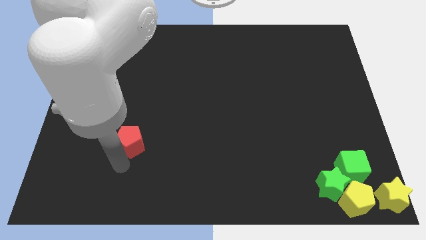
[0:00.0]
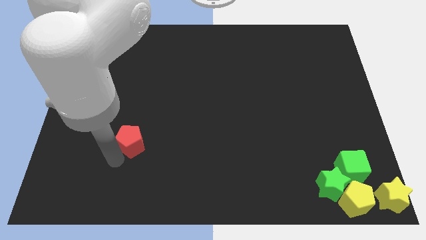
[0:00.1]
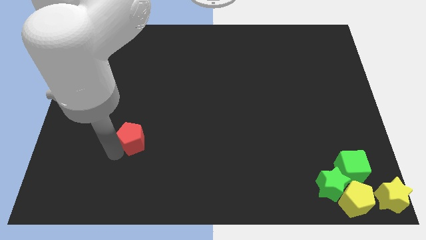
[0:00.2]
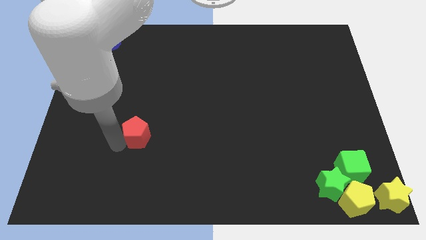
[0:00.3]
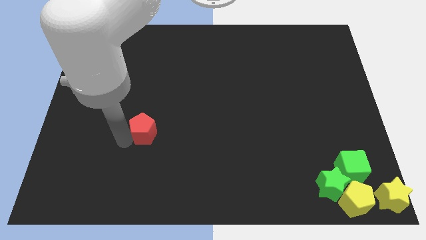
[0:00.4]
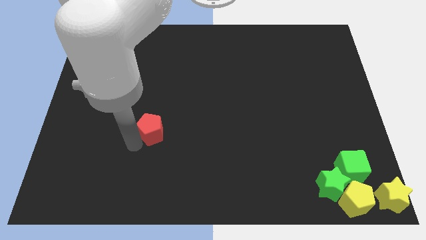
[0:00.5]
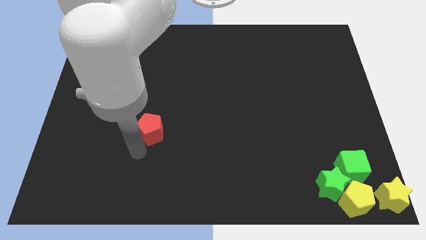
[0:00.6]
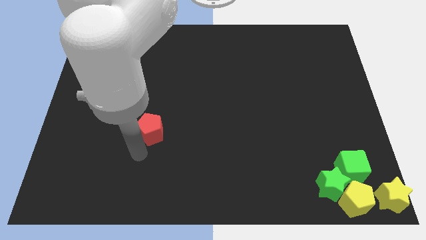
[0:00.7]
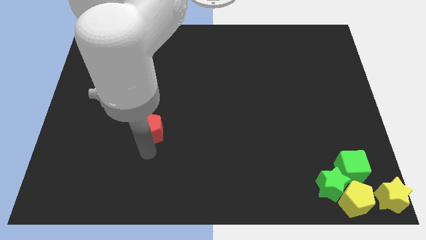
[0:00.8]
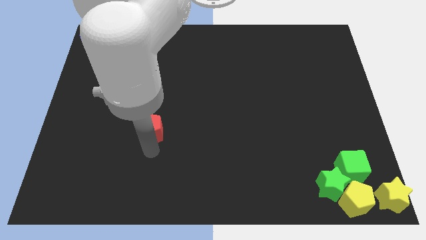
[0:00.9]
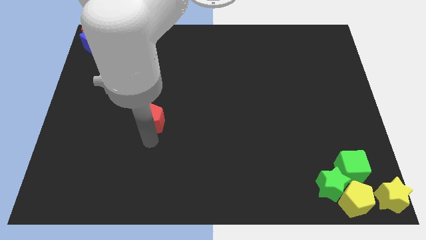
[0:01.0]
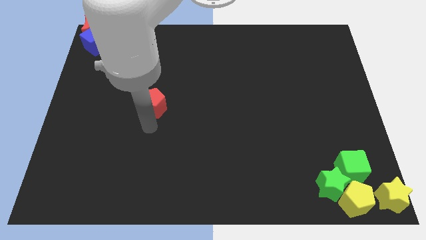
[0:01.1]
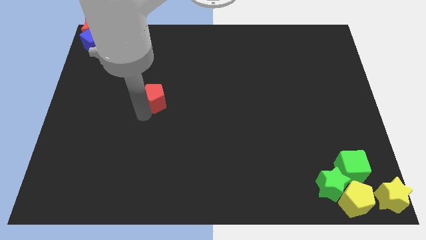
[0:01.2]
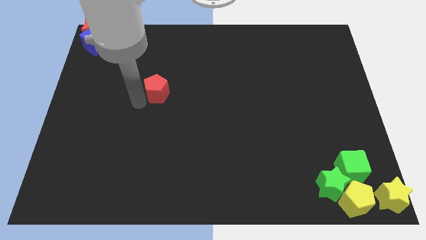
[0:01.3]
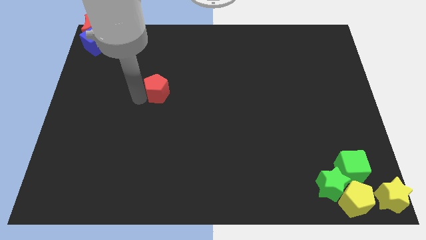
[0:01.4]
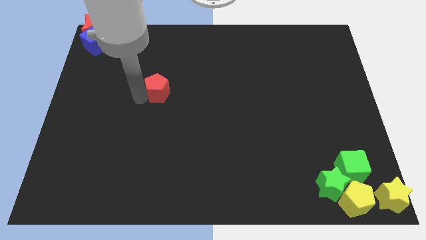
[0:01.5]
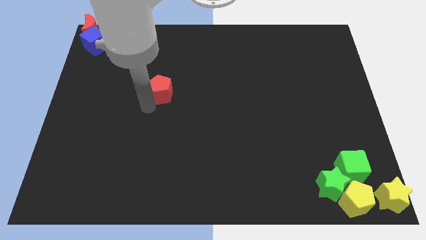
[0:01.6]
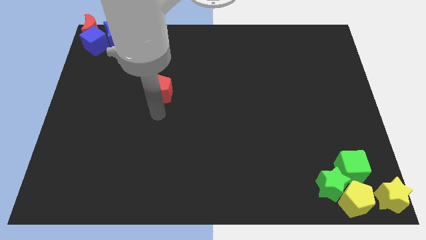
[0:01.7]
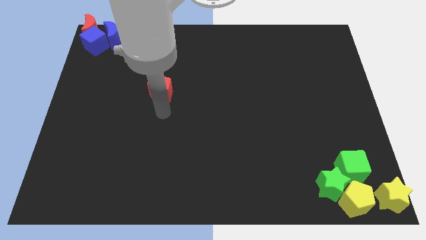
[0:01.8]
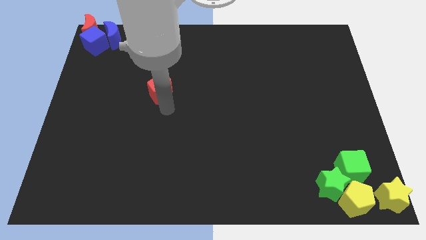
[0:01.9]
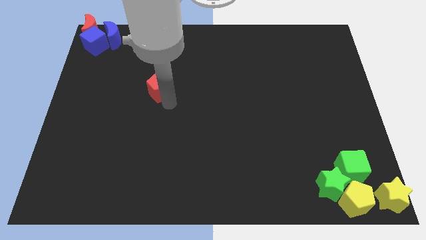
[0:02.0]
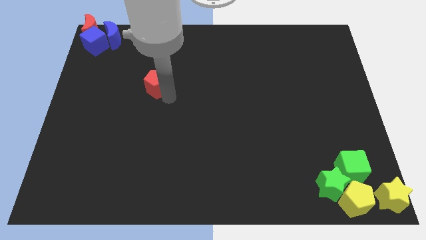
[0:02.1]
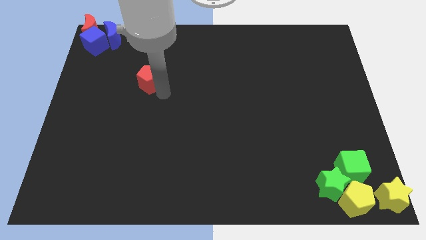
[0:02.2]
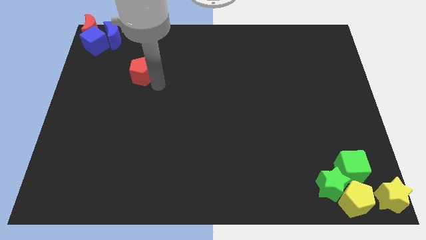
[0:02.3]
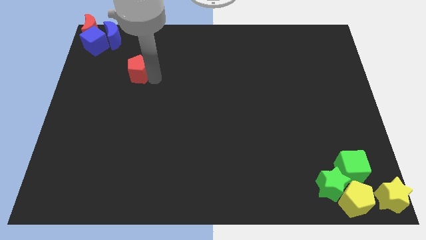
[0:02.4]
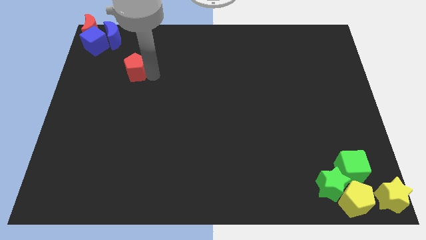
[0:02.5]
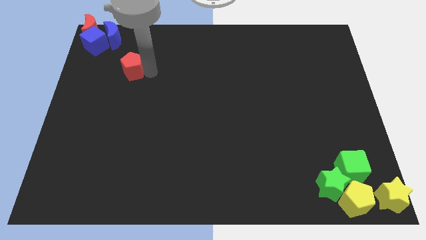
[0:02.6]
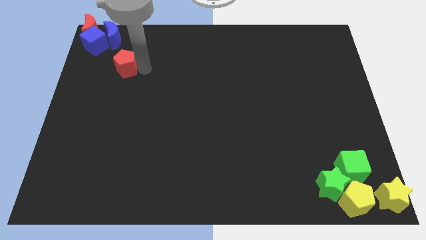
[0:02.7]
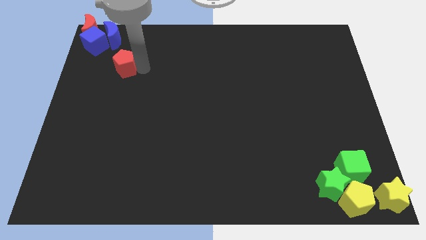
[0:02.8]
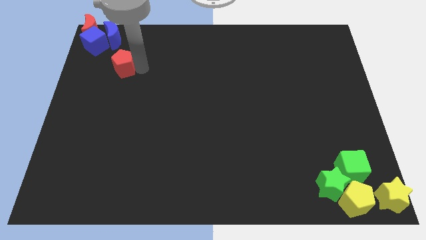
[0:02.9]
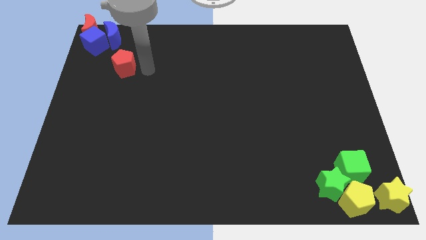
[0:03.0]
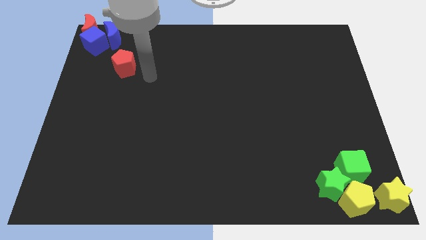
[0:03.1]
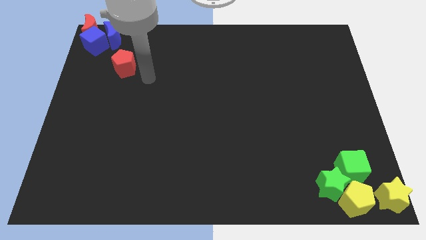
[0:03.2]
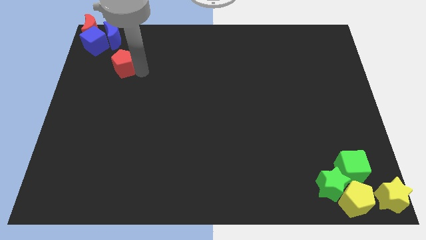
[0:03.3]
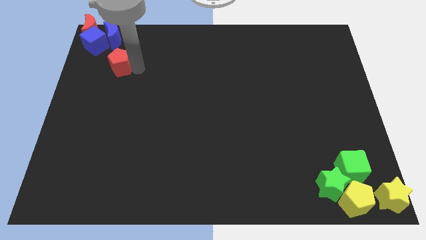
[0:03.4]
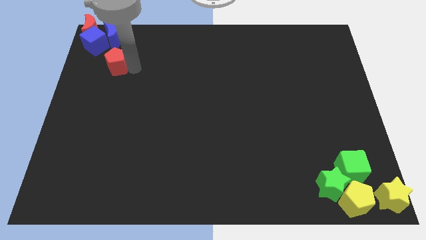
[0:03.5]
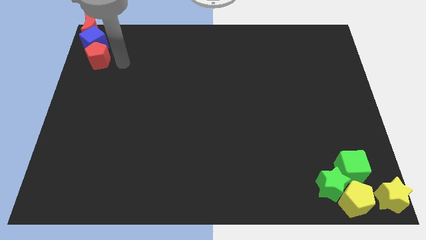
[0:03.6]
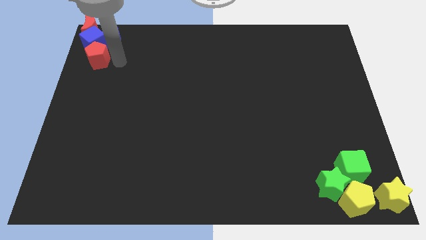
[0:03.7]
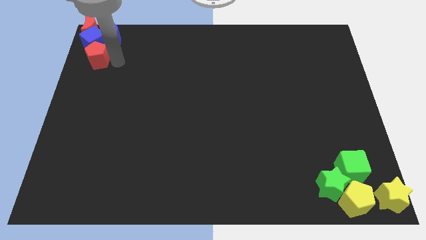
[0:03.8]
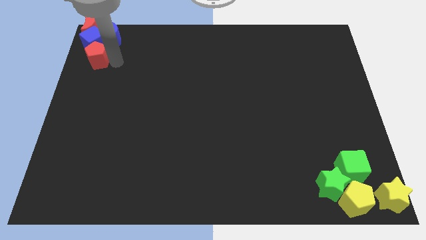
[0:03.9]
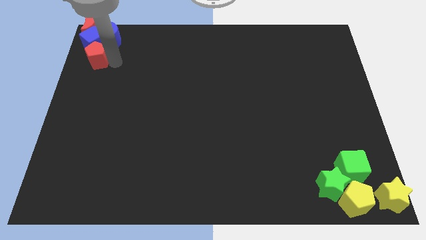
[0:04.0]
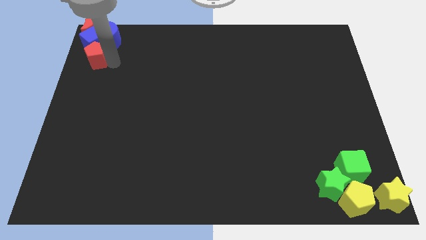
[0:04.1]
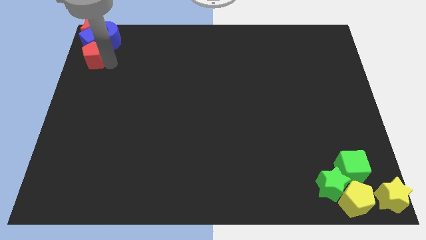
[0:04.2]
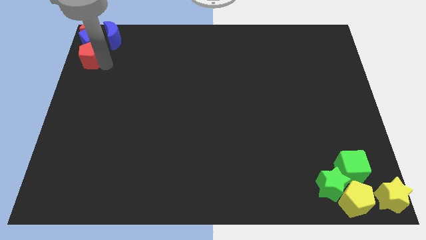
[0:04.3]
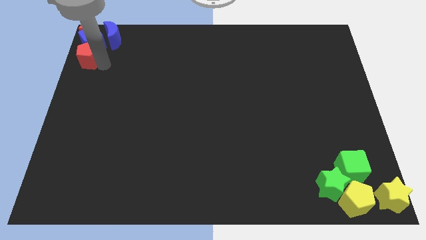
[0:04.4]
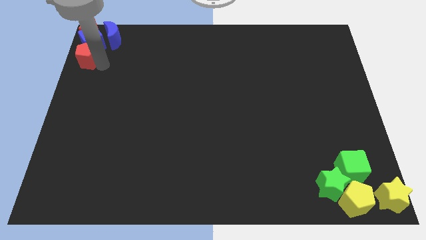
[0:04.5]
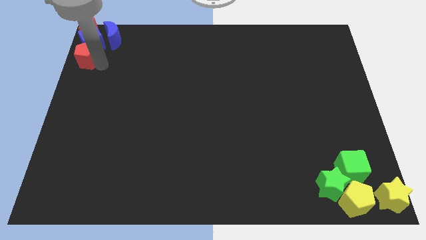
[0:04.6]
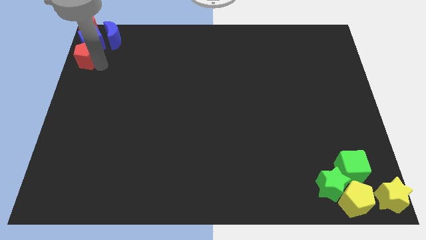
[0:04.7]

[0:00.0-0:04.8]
push the red pentagon into the blue cube

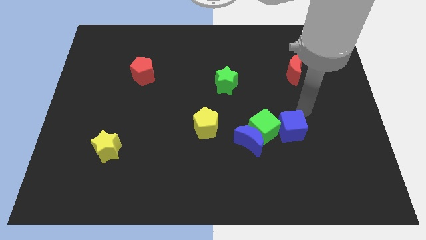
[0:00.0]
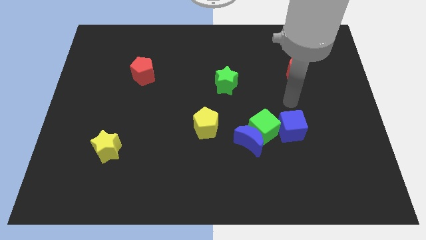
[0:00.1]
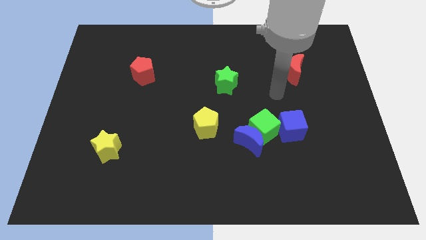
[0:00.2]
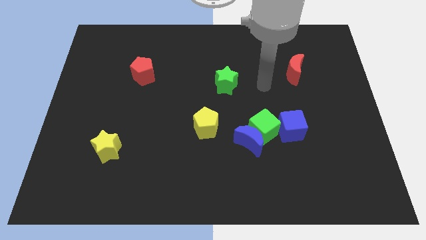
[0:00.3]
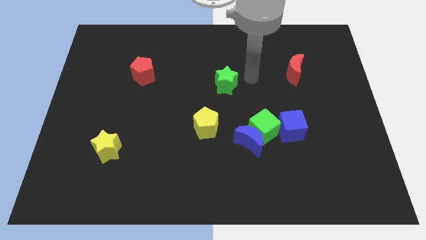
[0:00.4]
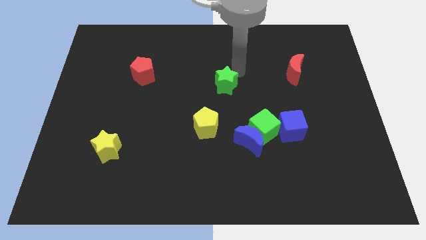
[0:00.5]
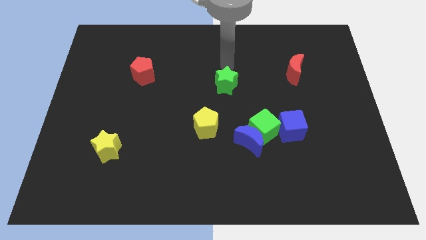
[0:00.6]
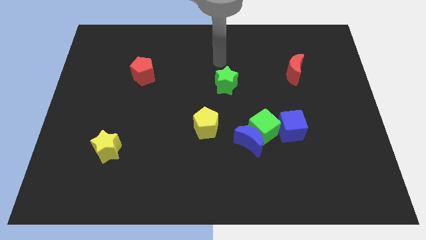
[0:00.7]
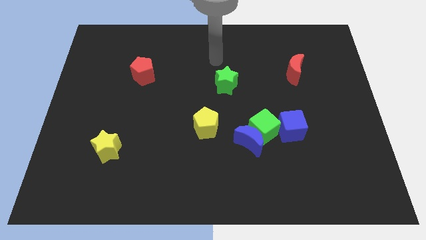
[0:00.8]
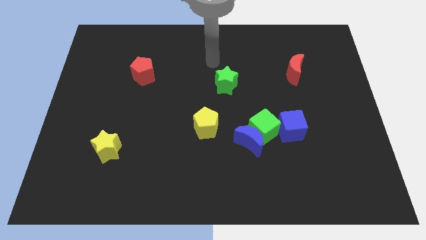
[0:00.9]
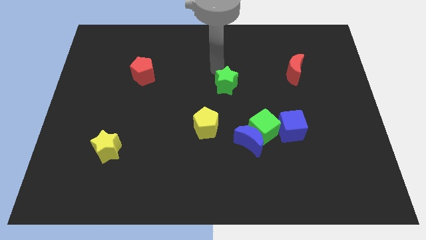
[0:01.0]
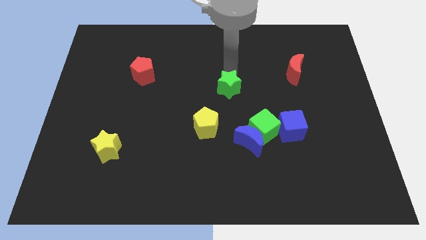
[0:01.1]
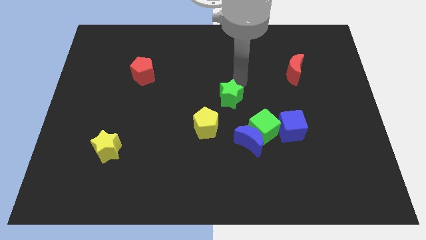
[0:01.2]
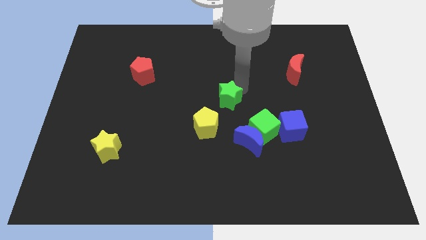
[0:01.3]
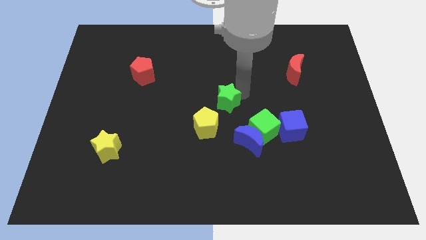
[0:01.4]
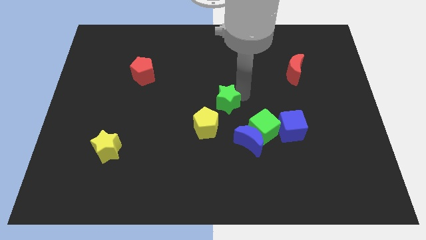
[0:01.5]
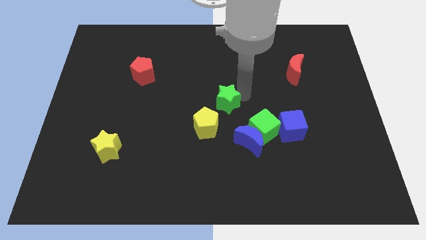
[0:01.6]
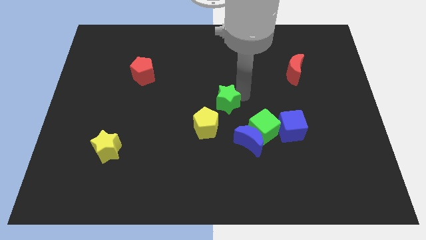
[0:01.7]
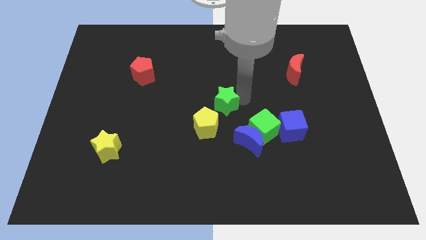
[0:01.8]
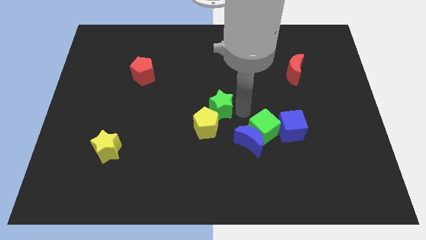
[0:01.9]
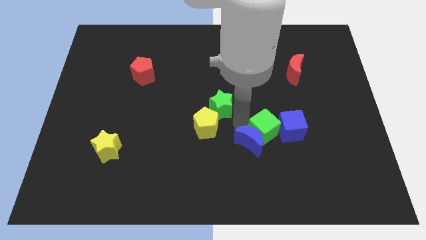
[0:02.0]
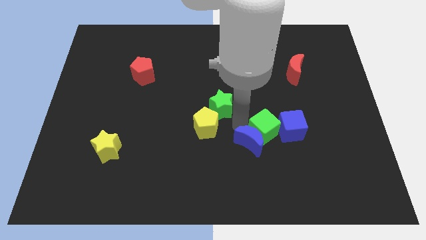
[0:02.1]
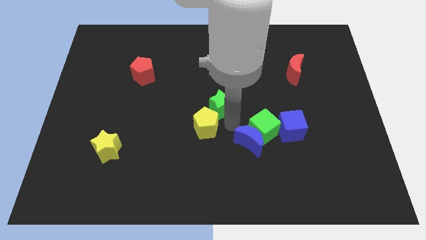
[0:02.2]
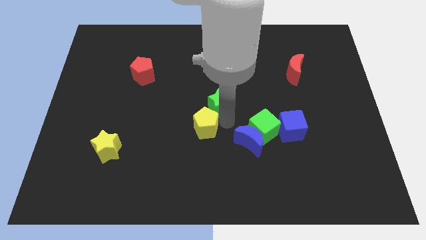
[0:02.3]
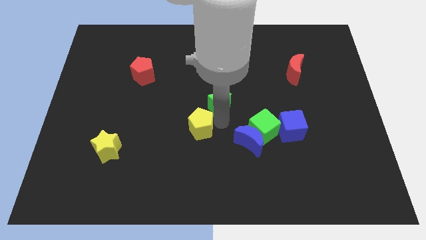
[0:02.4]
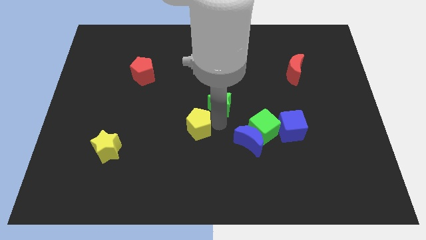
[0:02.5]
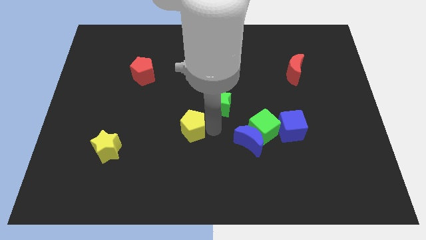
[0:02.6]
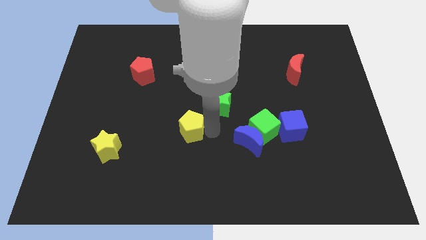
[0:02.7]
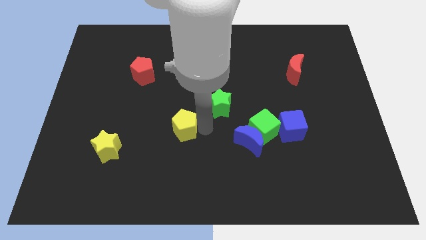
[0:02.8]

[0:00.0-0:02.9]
push the green star towards the yellow pentagon

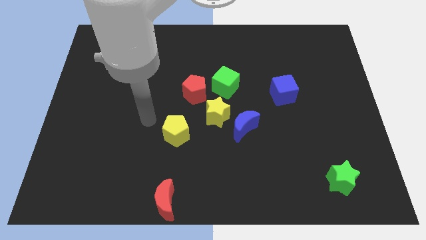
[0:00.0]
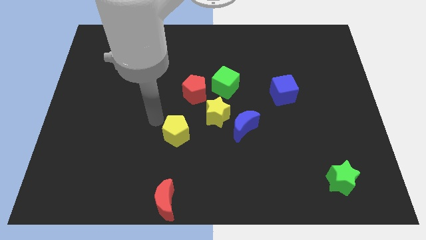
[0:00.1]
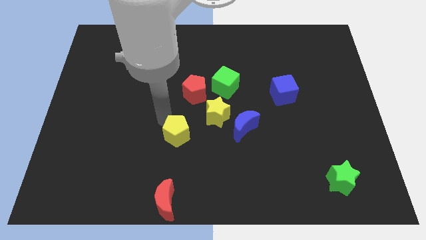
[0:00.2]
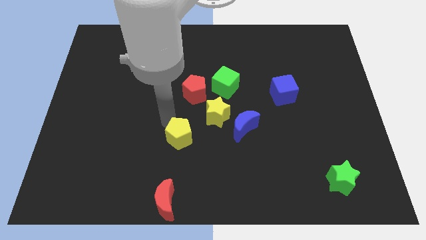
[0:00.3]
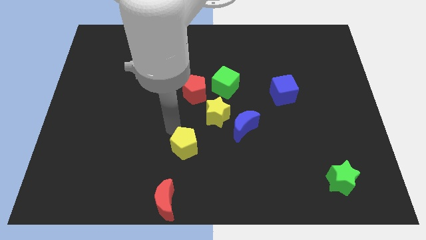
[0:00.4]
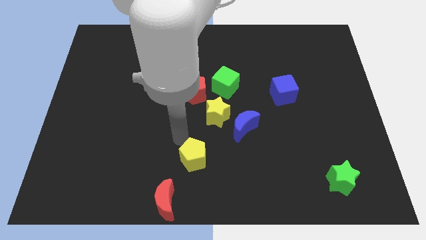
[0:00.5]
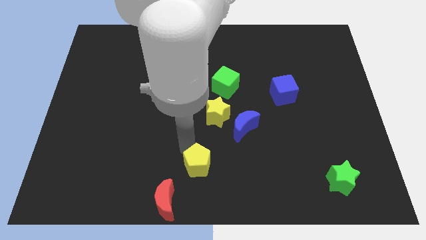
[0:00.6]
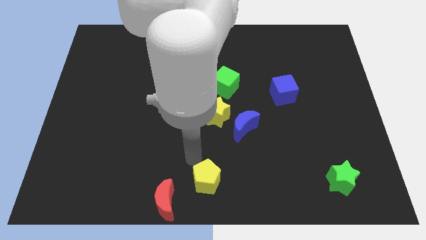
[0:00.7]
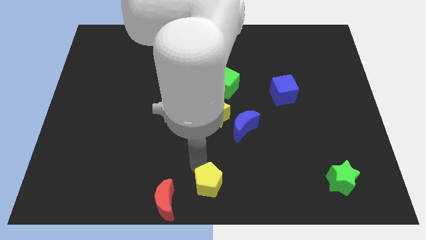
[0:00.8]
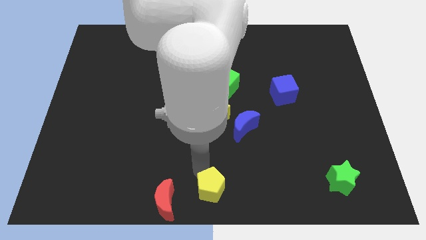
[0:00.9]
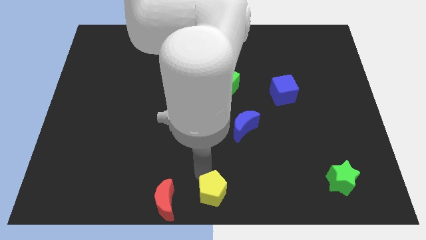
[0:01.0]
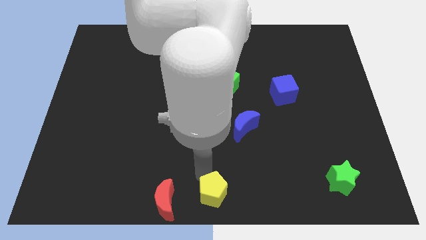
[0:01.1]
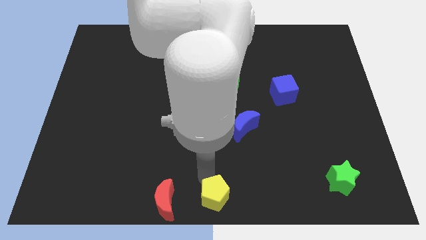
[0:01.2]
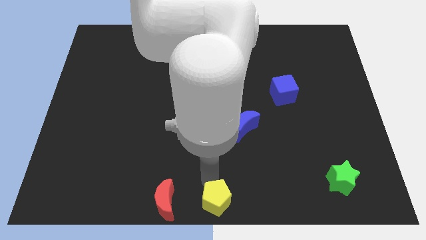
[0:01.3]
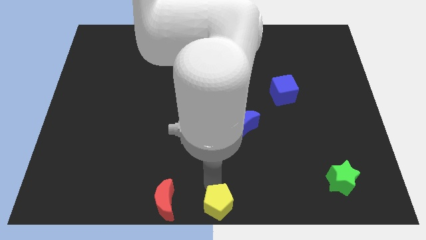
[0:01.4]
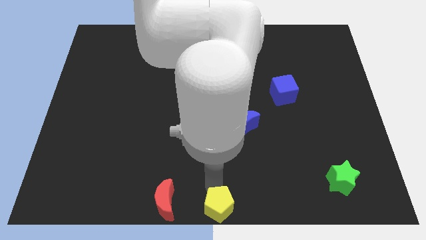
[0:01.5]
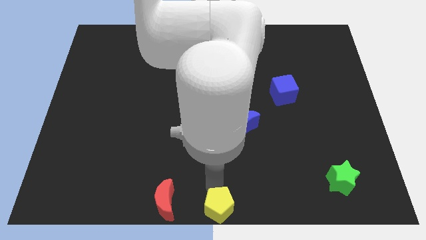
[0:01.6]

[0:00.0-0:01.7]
push the yellow pentagon to the bottom center
